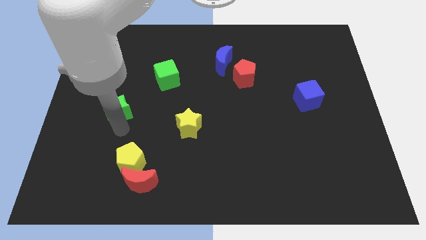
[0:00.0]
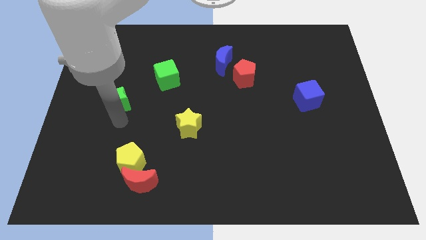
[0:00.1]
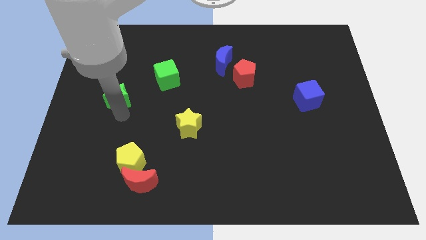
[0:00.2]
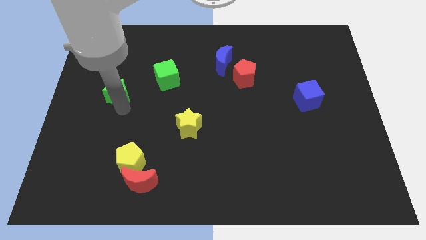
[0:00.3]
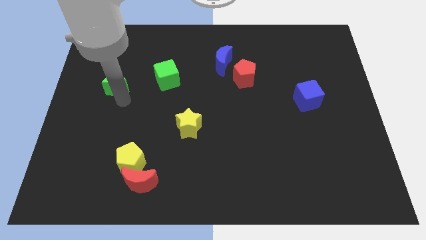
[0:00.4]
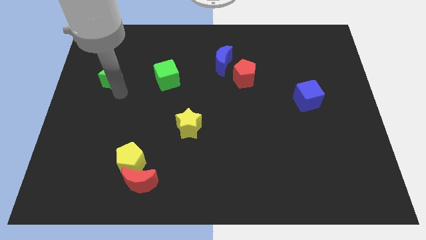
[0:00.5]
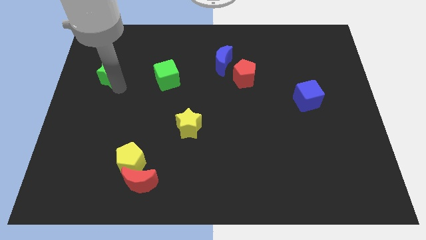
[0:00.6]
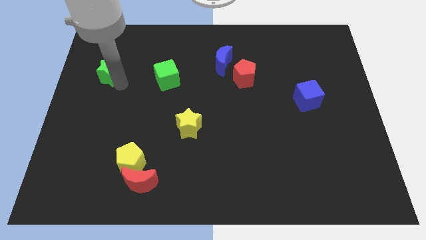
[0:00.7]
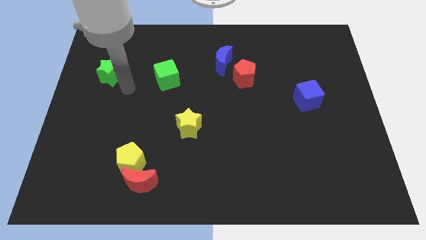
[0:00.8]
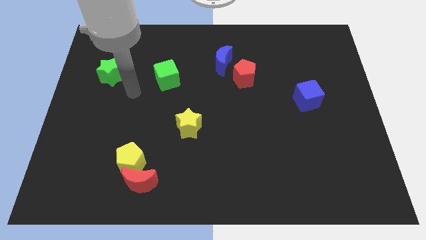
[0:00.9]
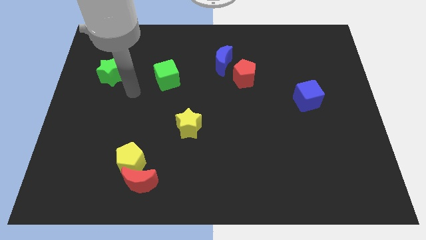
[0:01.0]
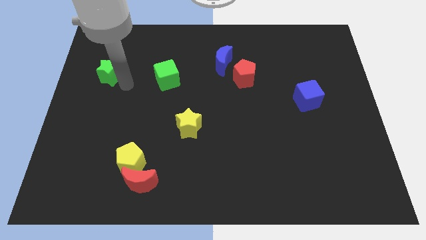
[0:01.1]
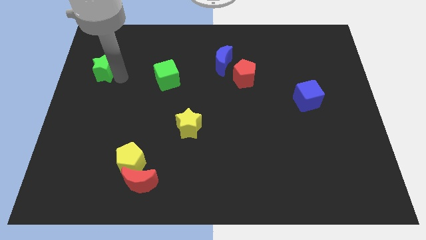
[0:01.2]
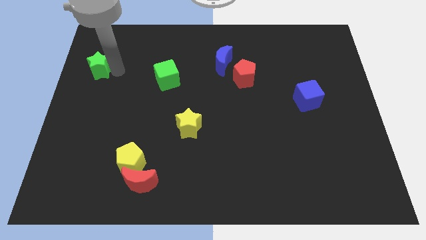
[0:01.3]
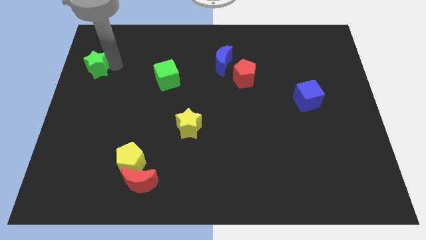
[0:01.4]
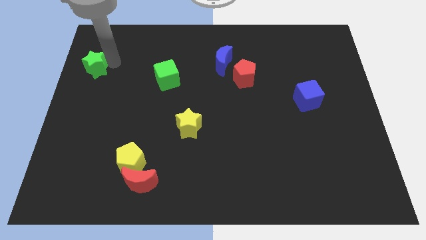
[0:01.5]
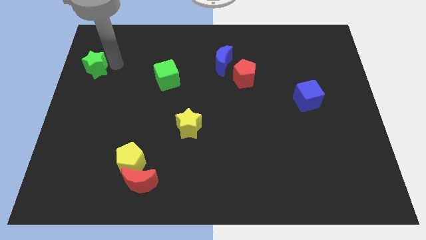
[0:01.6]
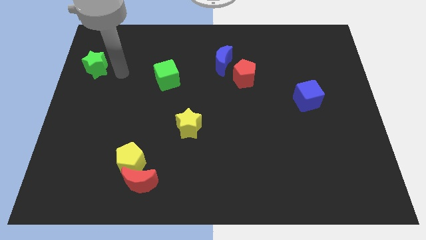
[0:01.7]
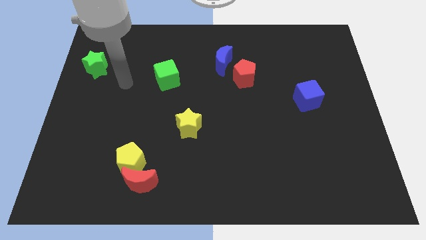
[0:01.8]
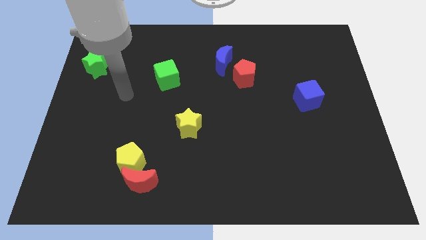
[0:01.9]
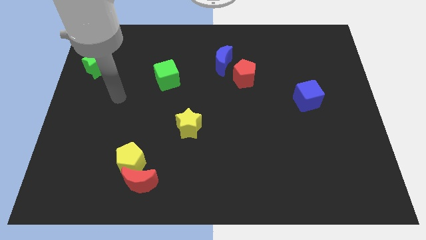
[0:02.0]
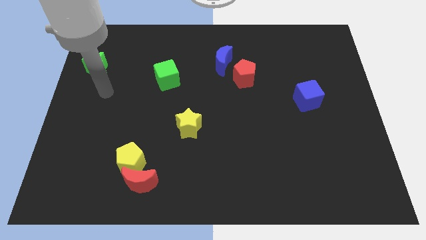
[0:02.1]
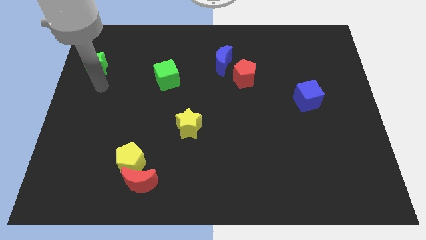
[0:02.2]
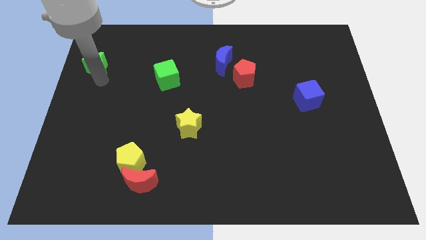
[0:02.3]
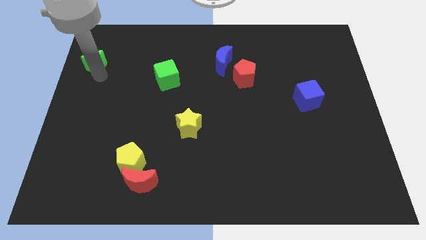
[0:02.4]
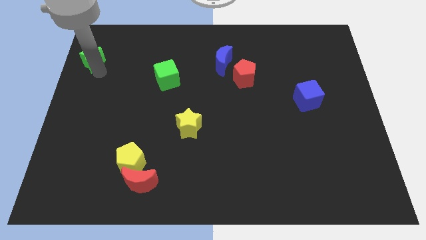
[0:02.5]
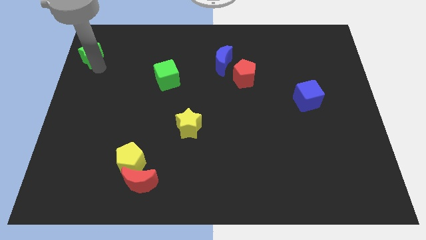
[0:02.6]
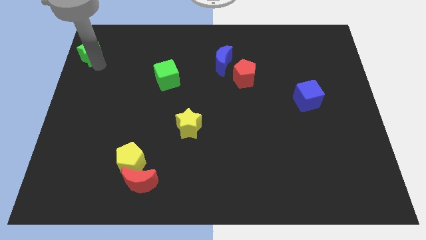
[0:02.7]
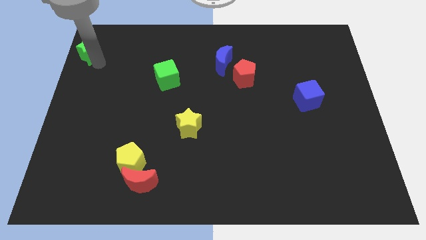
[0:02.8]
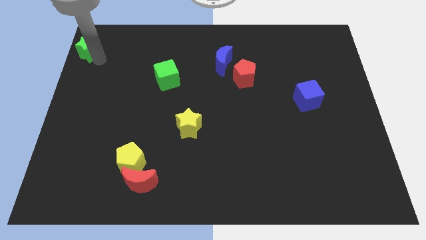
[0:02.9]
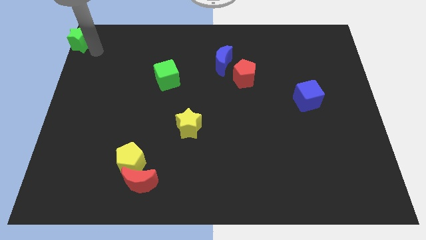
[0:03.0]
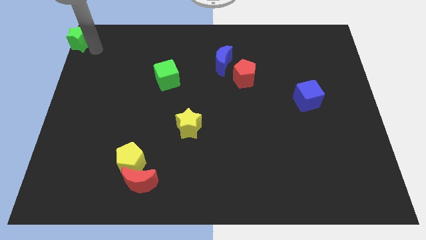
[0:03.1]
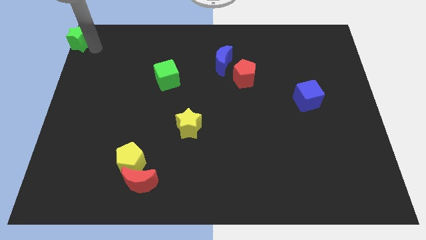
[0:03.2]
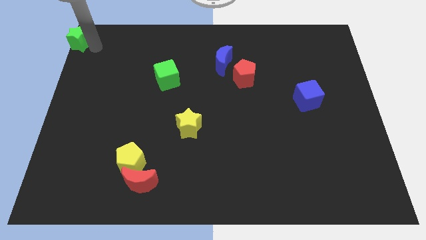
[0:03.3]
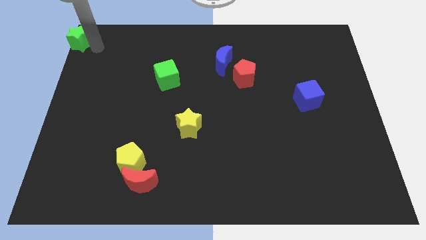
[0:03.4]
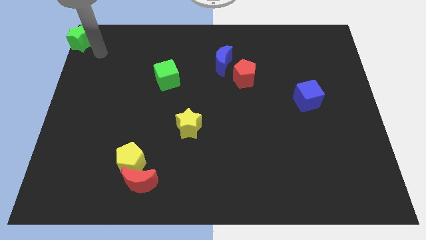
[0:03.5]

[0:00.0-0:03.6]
place green star to the top left corner of the board

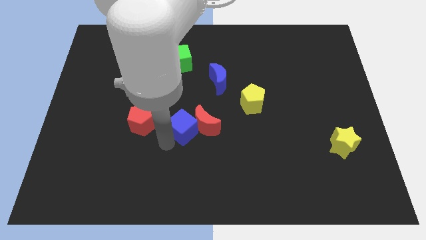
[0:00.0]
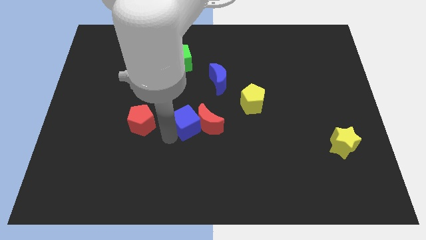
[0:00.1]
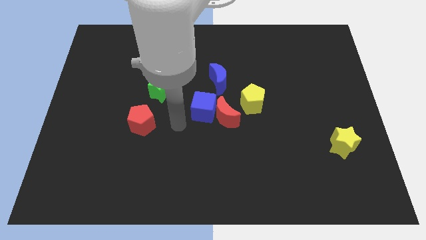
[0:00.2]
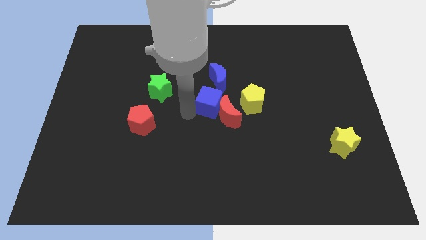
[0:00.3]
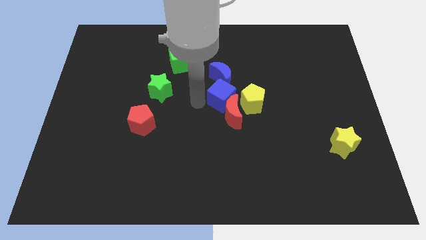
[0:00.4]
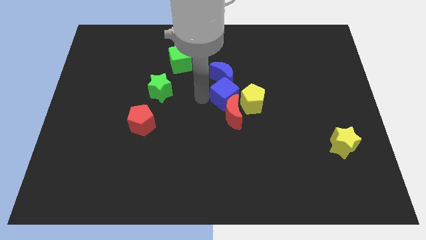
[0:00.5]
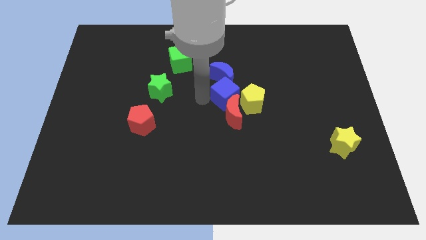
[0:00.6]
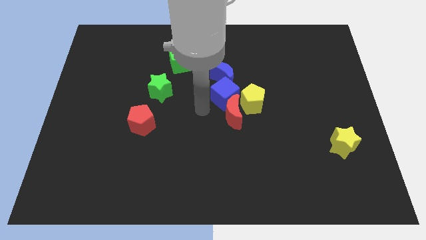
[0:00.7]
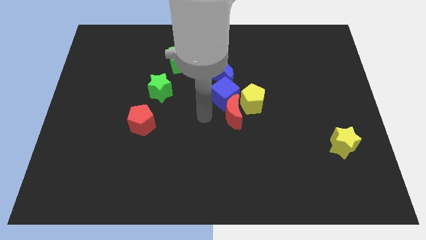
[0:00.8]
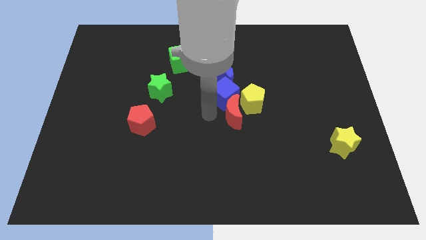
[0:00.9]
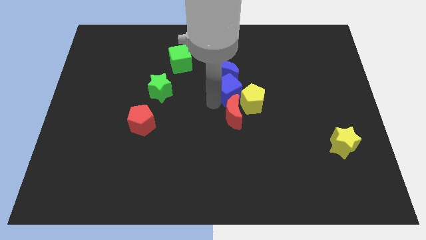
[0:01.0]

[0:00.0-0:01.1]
push the blue cube and red crescent towards the center of the board

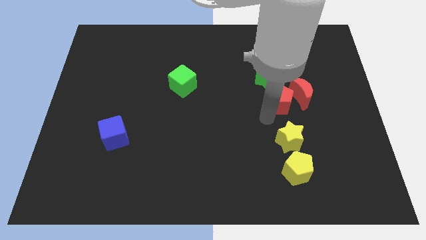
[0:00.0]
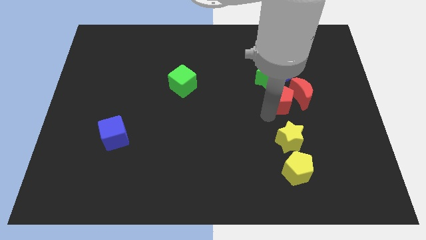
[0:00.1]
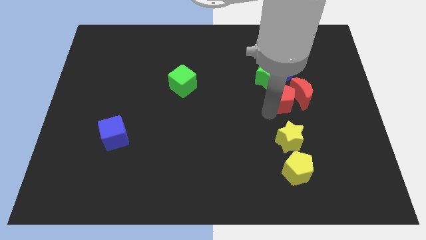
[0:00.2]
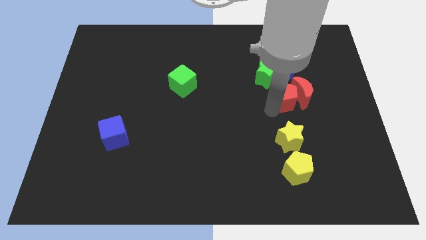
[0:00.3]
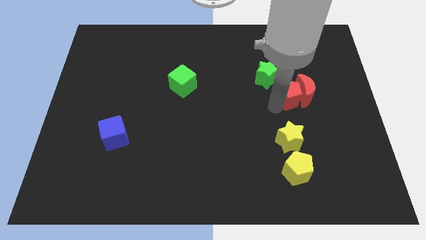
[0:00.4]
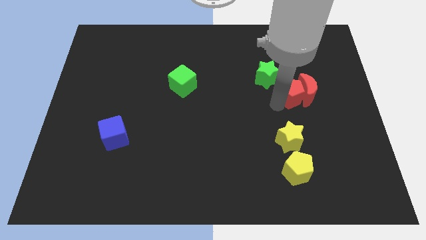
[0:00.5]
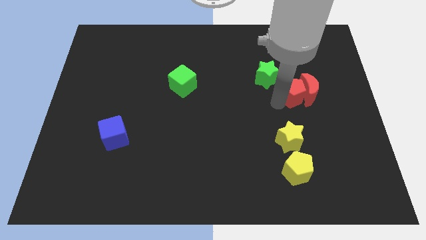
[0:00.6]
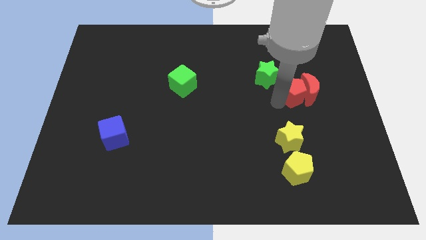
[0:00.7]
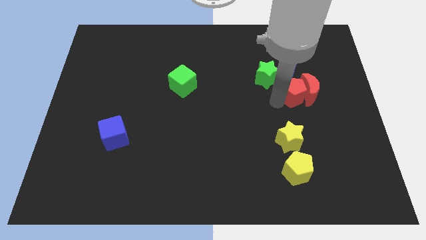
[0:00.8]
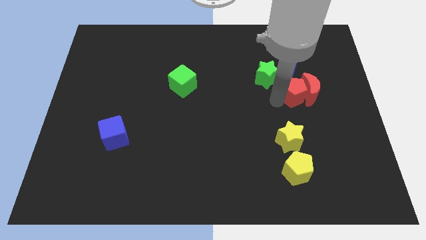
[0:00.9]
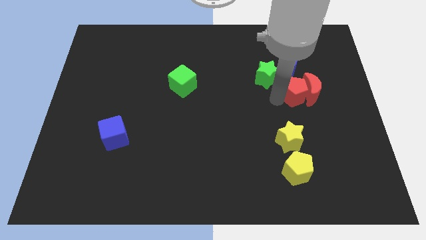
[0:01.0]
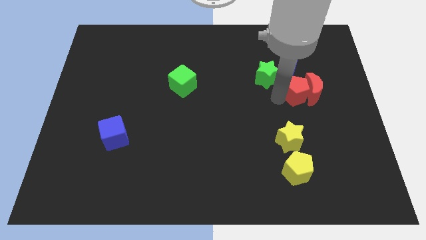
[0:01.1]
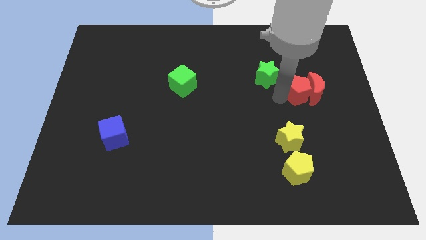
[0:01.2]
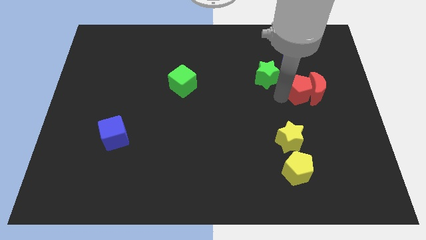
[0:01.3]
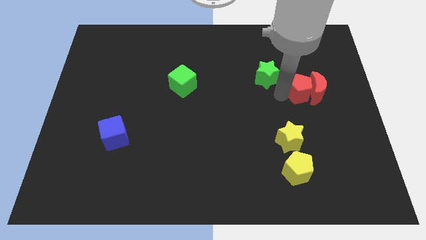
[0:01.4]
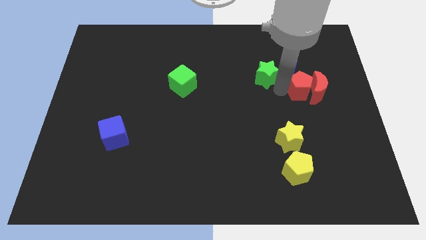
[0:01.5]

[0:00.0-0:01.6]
push the red pentagon into the red crescent

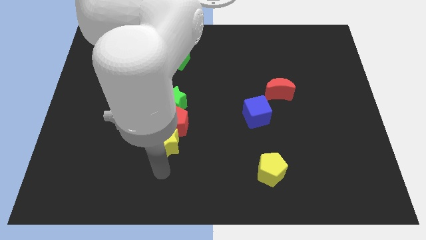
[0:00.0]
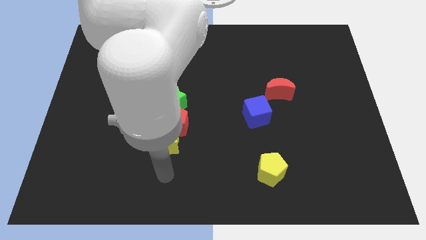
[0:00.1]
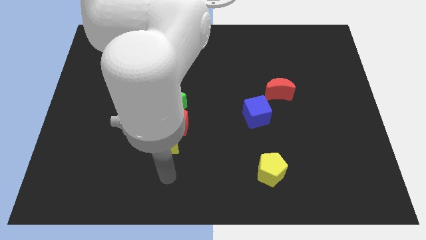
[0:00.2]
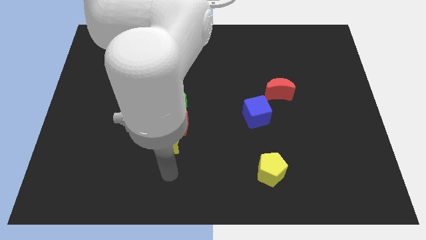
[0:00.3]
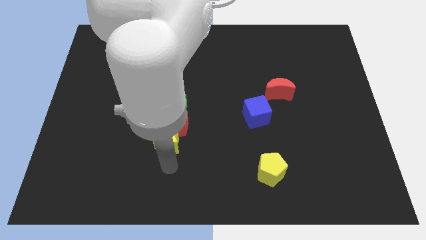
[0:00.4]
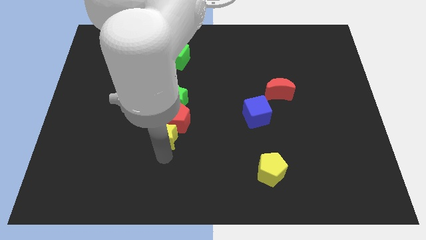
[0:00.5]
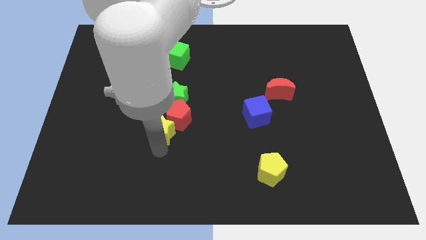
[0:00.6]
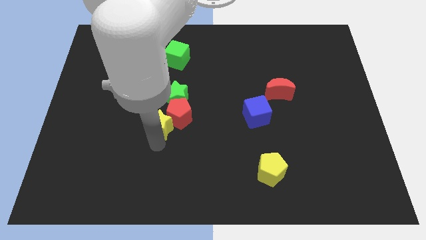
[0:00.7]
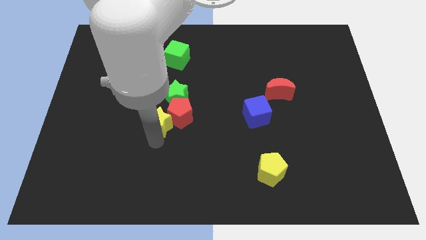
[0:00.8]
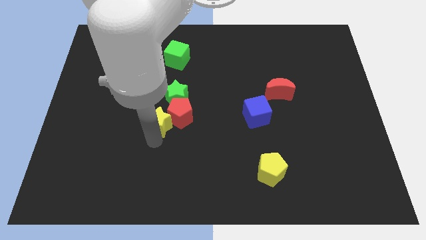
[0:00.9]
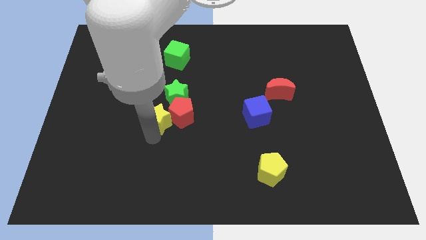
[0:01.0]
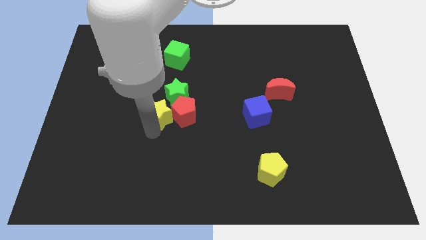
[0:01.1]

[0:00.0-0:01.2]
place yellow star to the left of the red pentagon

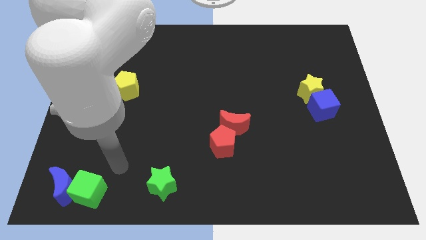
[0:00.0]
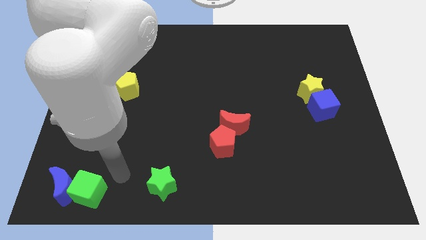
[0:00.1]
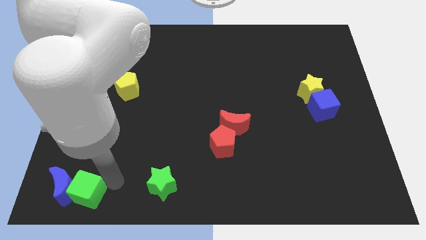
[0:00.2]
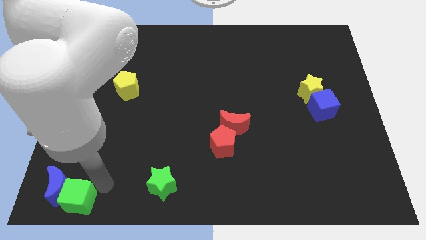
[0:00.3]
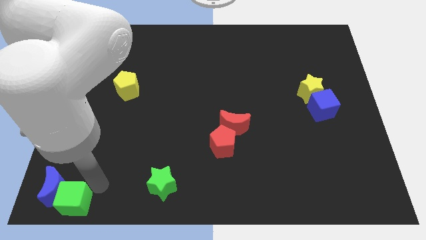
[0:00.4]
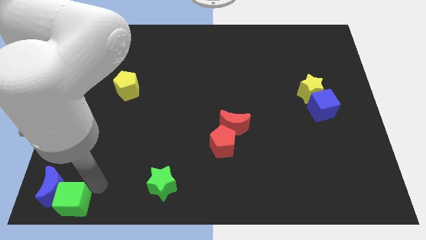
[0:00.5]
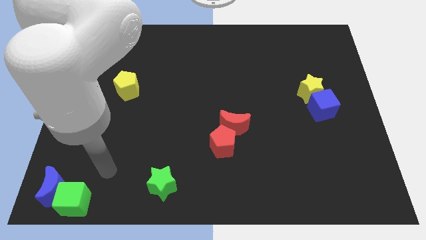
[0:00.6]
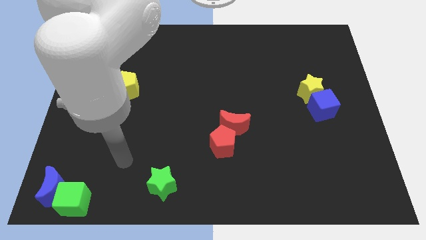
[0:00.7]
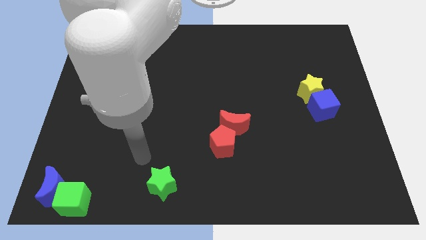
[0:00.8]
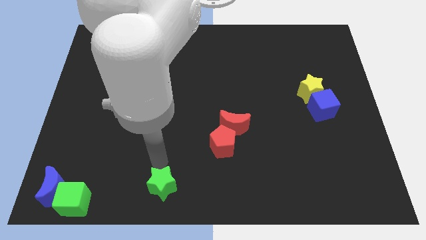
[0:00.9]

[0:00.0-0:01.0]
push the green cube and blue crescent to the bottom left corner of the board

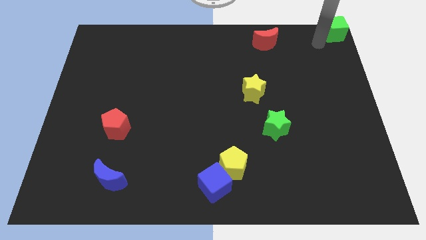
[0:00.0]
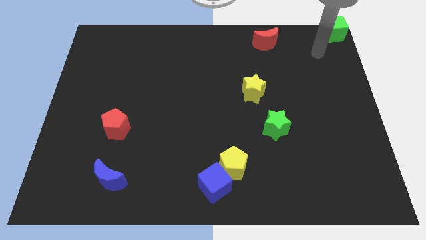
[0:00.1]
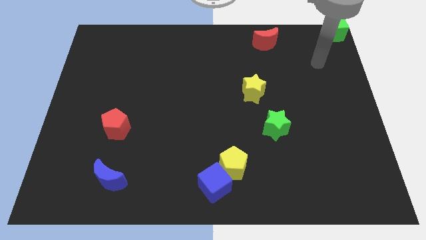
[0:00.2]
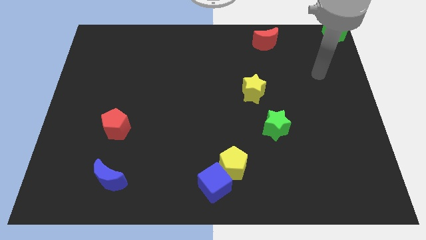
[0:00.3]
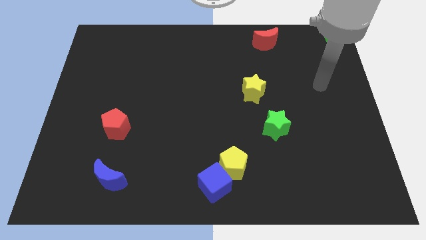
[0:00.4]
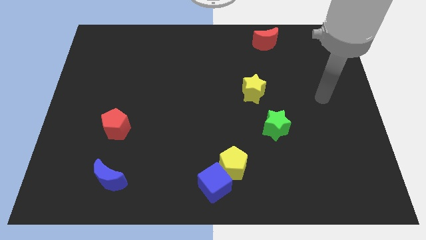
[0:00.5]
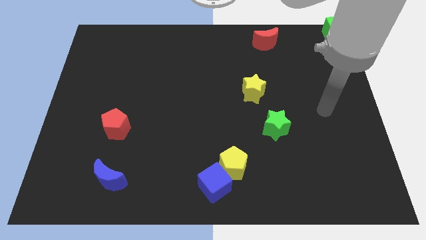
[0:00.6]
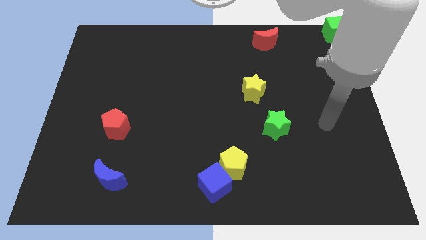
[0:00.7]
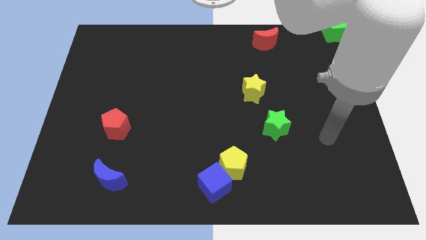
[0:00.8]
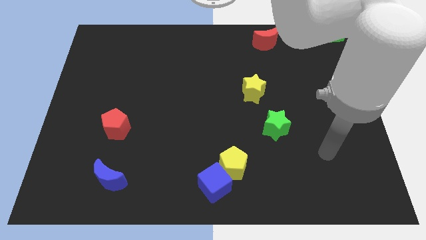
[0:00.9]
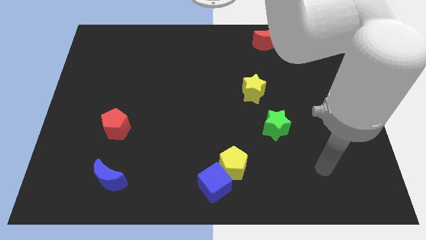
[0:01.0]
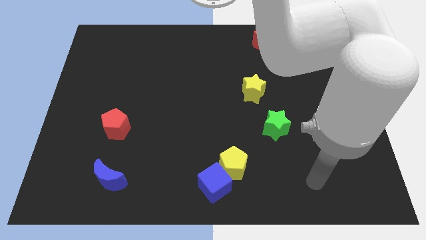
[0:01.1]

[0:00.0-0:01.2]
move the arm to the bottom right side of the board
